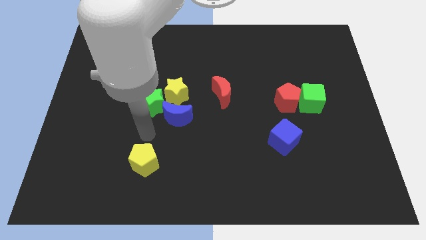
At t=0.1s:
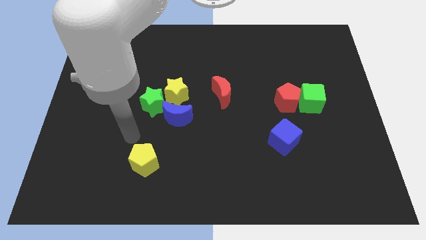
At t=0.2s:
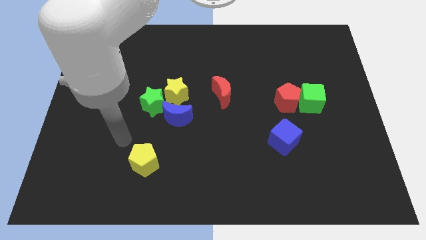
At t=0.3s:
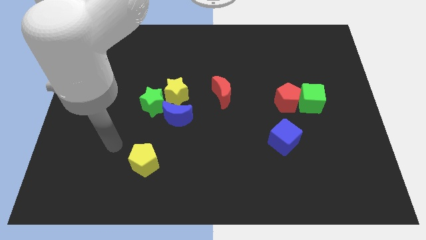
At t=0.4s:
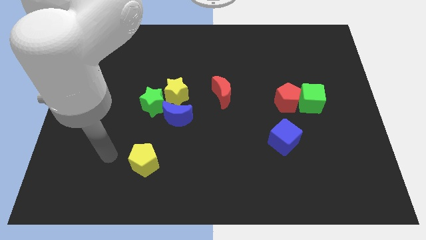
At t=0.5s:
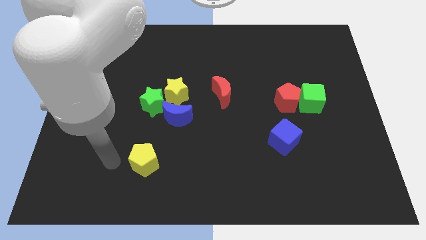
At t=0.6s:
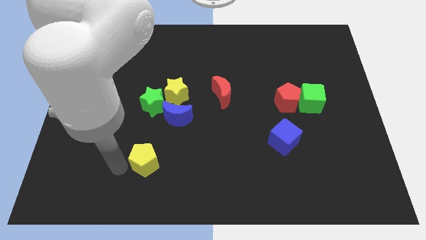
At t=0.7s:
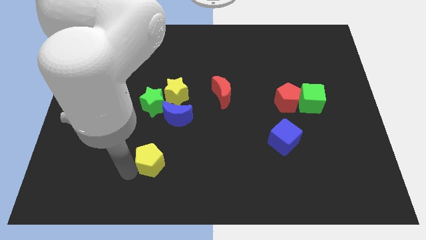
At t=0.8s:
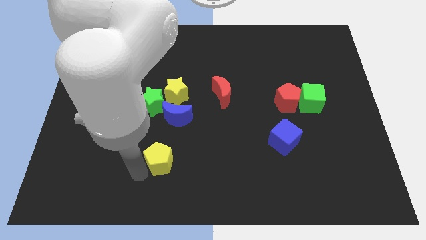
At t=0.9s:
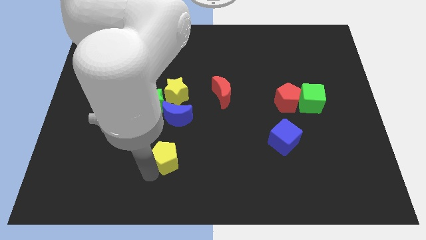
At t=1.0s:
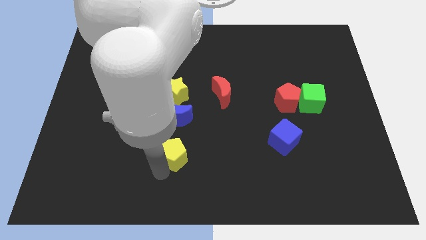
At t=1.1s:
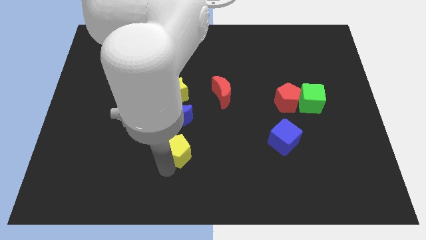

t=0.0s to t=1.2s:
place the yellow pentagon vertically below blue moon

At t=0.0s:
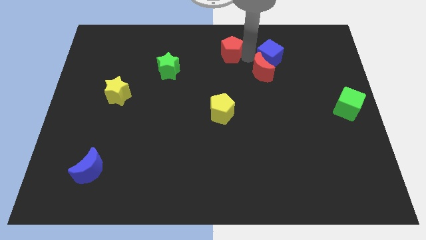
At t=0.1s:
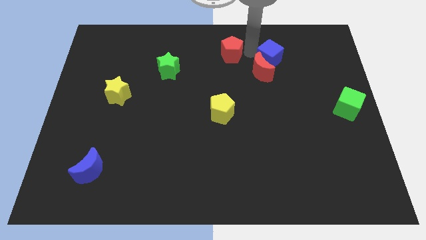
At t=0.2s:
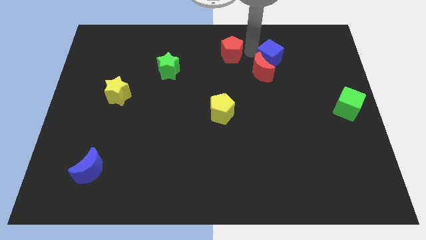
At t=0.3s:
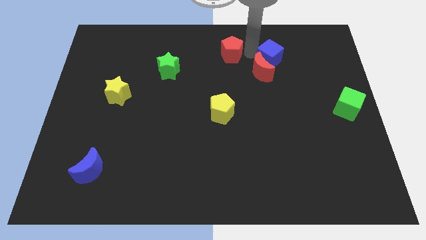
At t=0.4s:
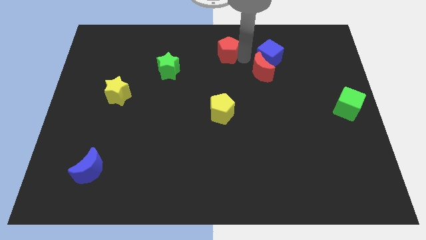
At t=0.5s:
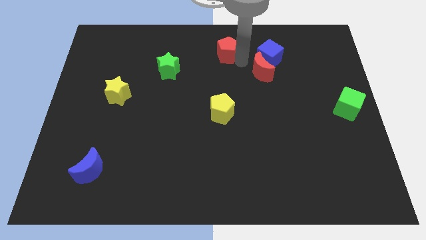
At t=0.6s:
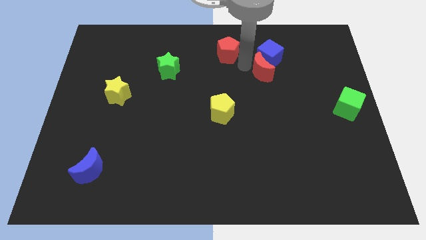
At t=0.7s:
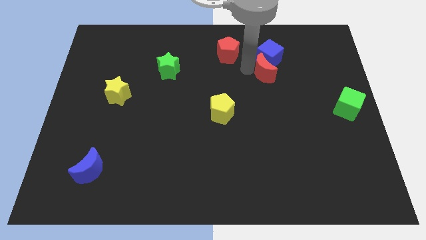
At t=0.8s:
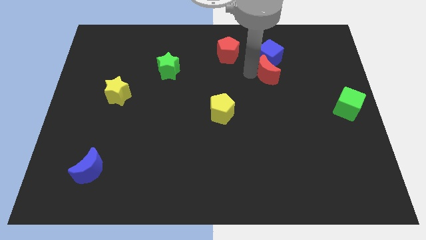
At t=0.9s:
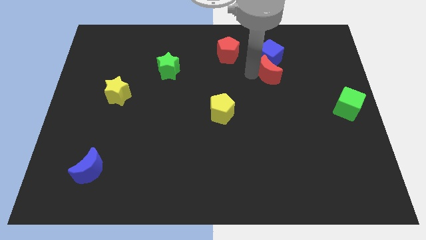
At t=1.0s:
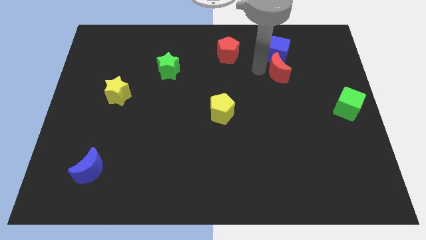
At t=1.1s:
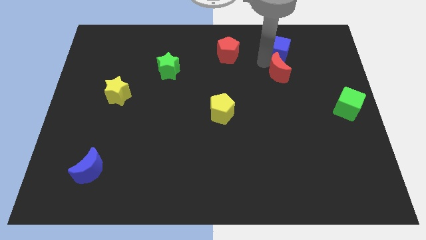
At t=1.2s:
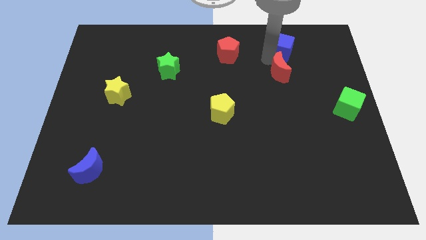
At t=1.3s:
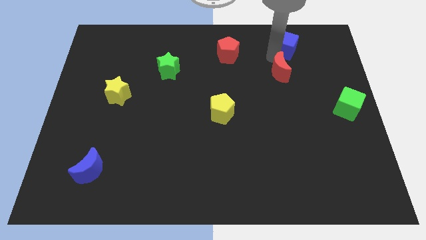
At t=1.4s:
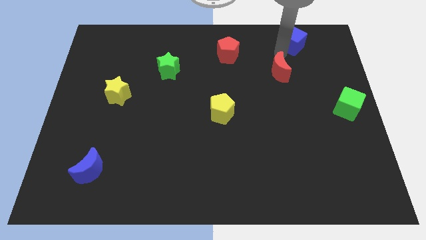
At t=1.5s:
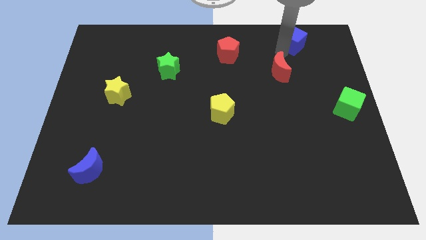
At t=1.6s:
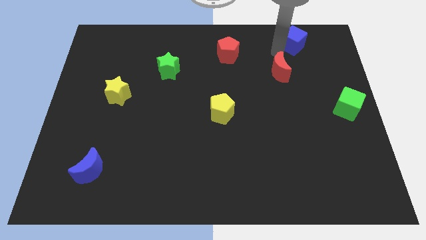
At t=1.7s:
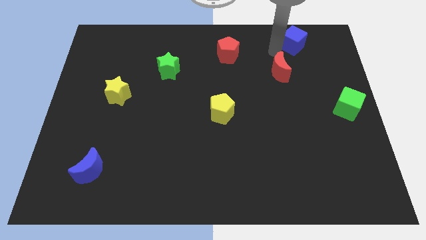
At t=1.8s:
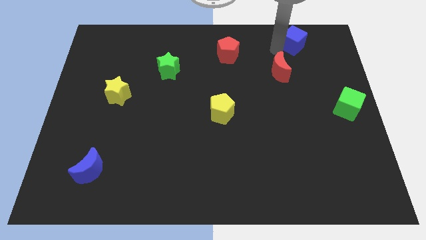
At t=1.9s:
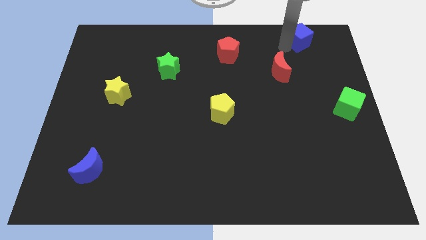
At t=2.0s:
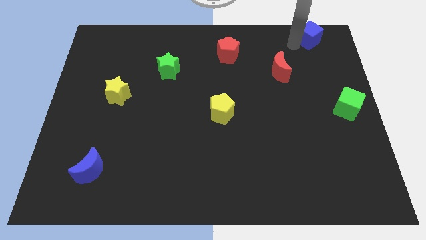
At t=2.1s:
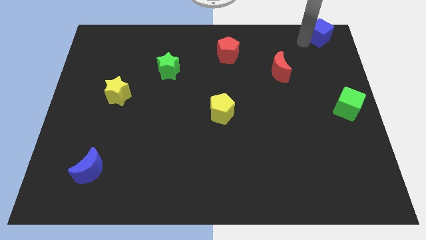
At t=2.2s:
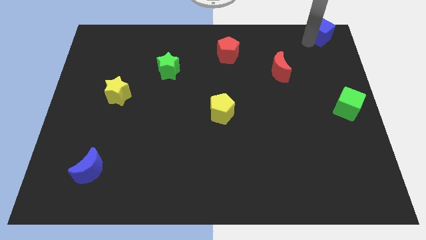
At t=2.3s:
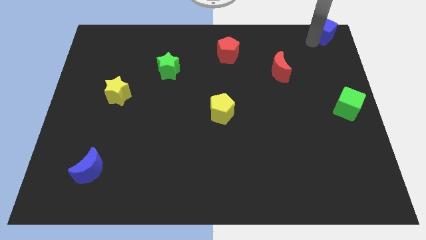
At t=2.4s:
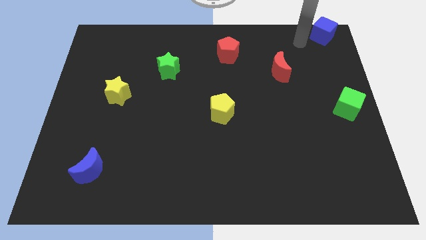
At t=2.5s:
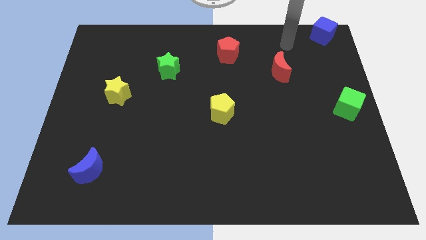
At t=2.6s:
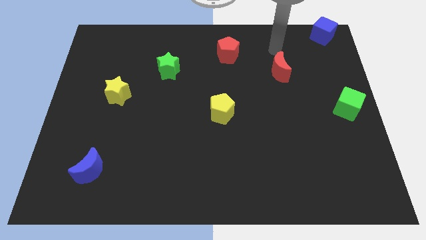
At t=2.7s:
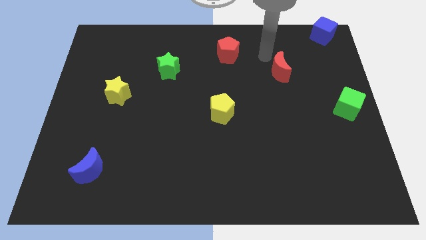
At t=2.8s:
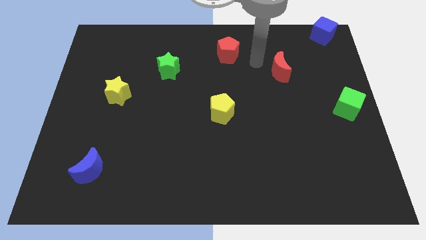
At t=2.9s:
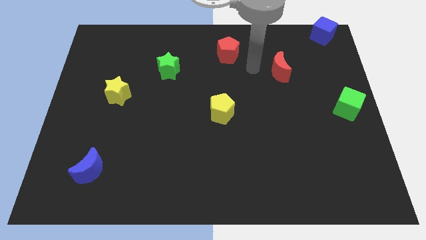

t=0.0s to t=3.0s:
place the blue cube above the green cube

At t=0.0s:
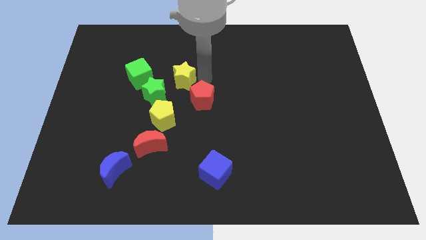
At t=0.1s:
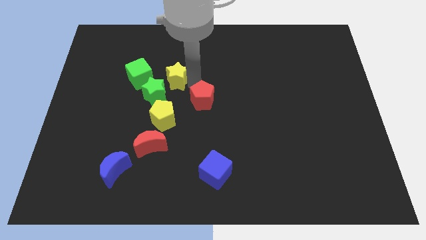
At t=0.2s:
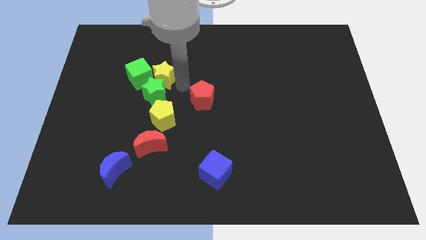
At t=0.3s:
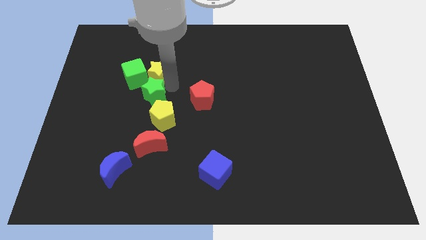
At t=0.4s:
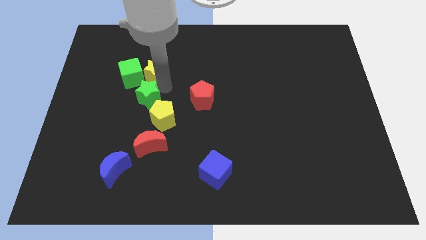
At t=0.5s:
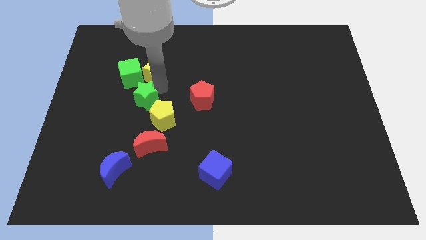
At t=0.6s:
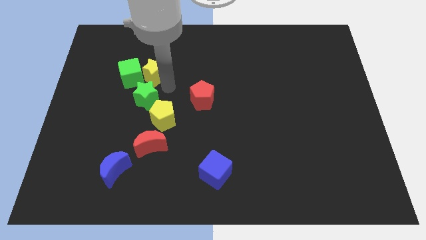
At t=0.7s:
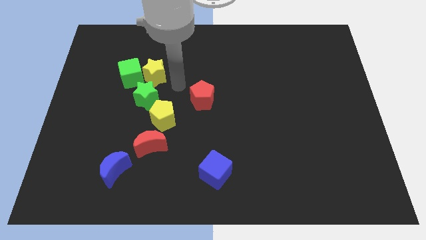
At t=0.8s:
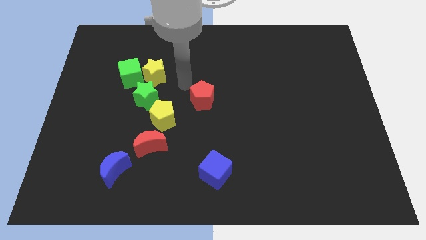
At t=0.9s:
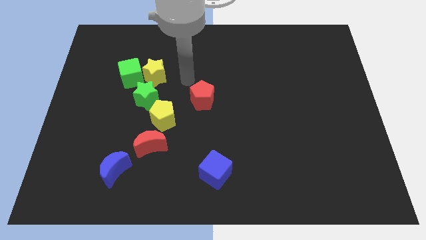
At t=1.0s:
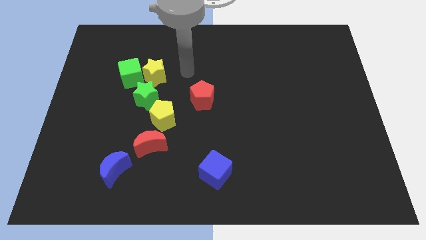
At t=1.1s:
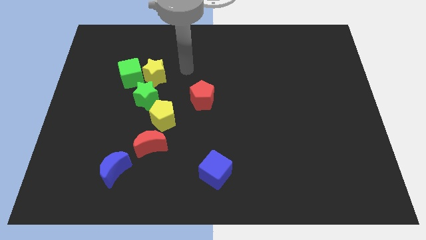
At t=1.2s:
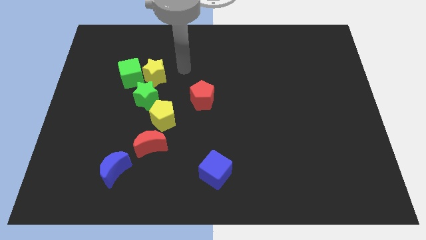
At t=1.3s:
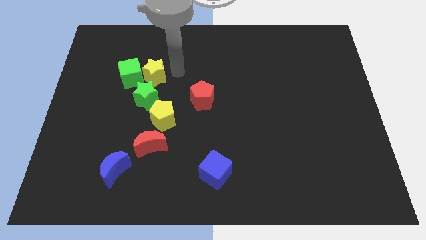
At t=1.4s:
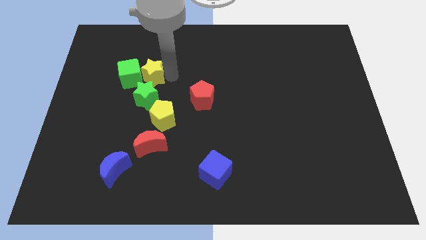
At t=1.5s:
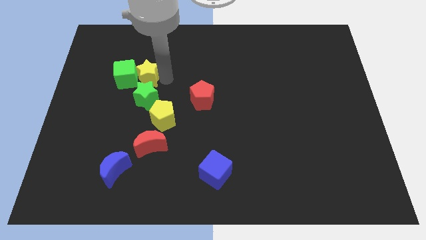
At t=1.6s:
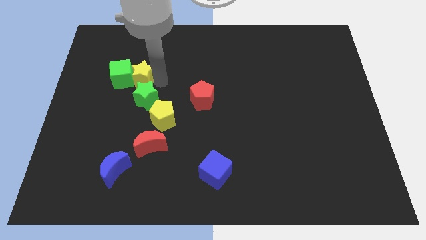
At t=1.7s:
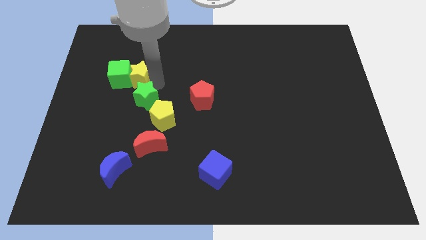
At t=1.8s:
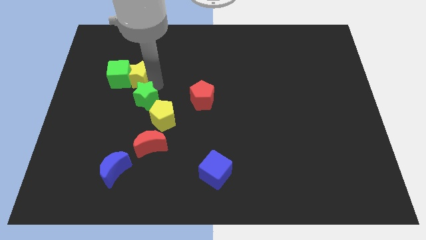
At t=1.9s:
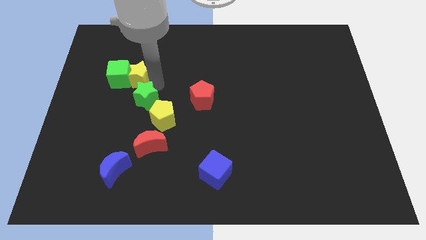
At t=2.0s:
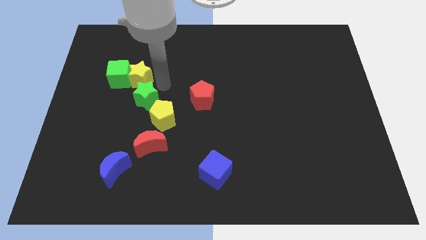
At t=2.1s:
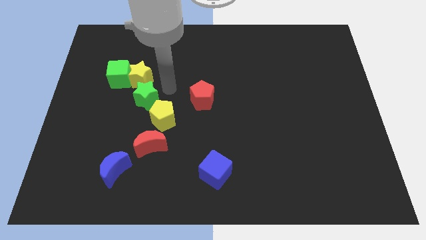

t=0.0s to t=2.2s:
place yellow star green block and green star in the form of arc

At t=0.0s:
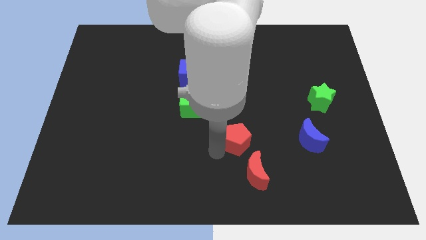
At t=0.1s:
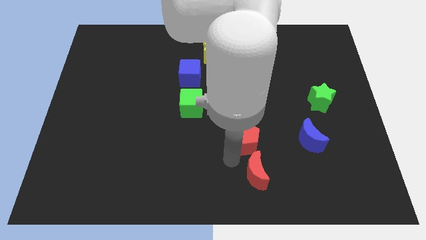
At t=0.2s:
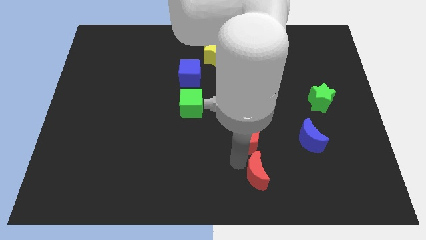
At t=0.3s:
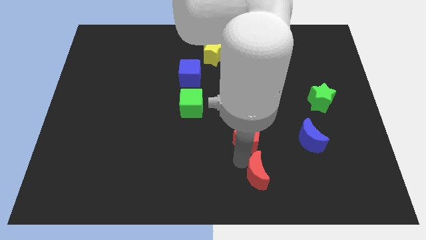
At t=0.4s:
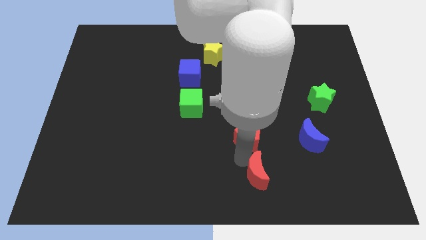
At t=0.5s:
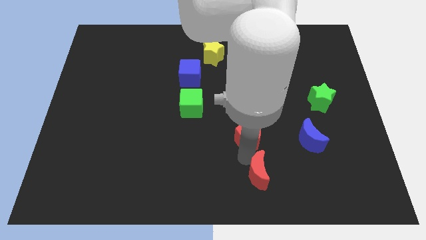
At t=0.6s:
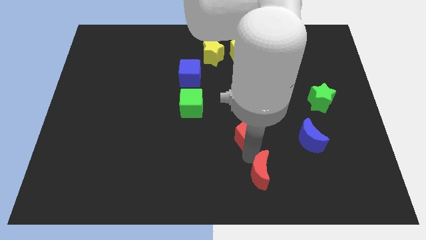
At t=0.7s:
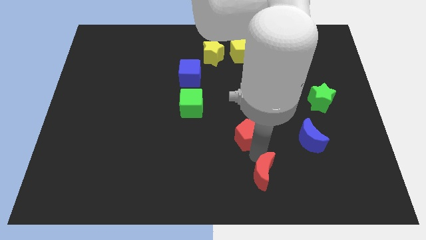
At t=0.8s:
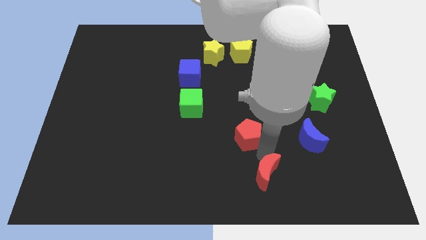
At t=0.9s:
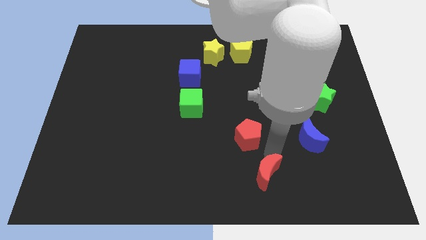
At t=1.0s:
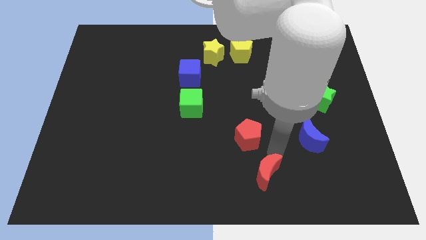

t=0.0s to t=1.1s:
separate red blocks from each other

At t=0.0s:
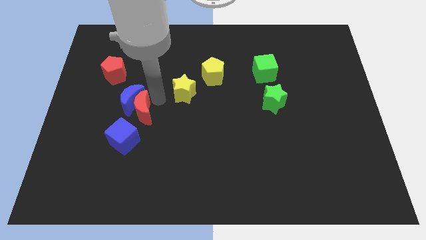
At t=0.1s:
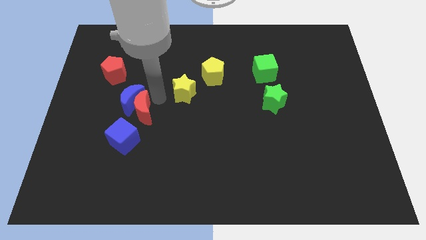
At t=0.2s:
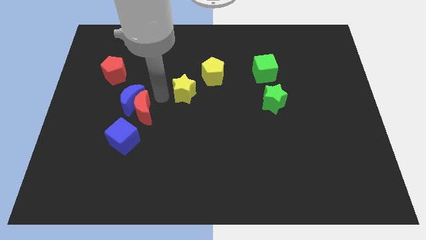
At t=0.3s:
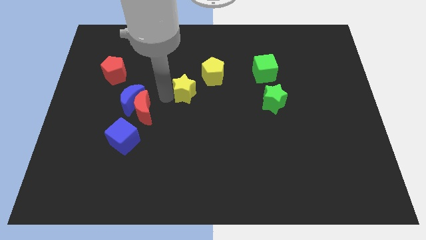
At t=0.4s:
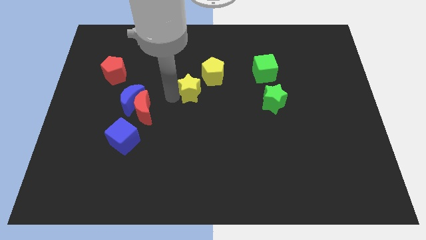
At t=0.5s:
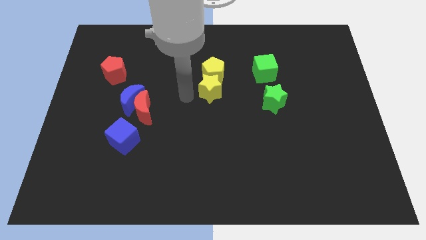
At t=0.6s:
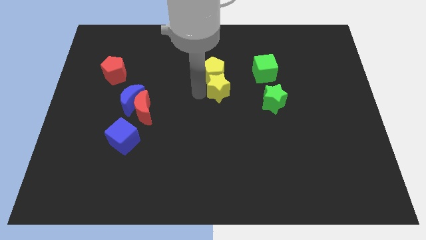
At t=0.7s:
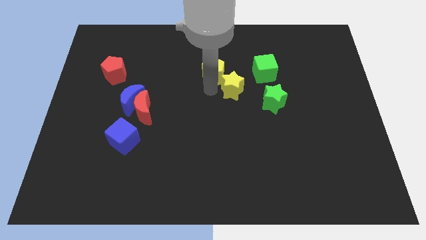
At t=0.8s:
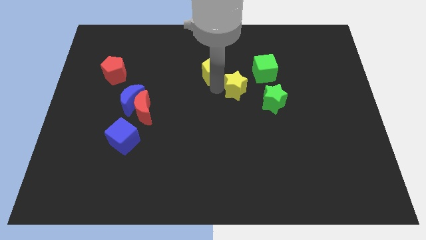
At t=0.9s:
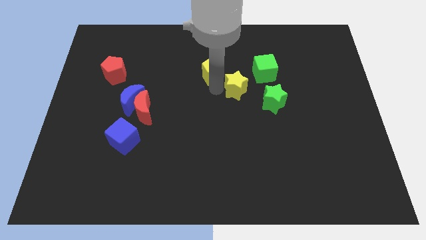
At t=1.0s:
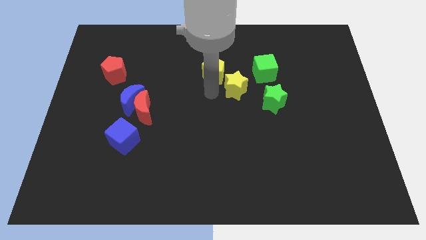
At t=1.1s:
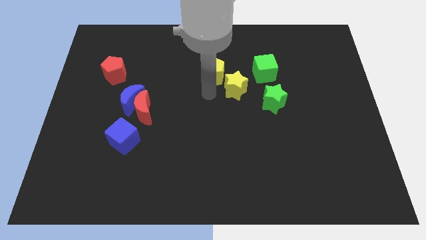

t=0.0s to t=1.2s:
move yellow star near green cube

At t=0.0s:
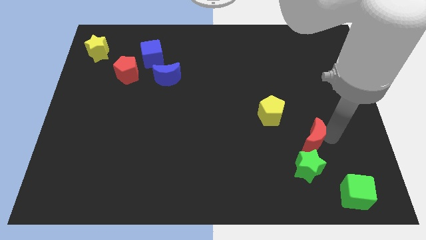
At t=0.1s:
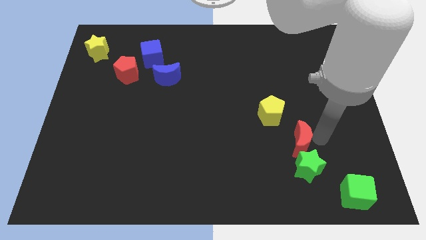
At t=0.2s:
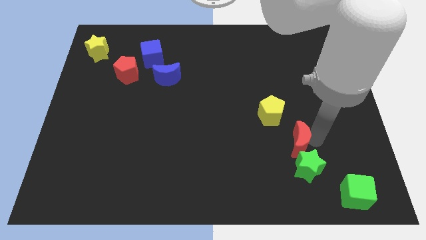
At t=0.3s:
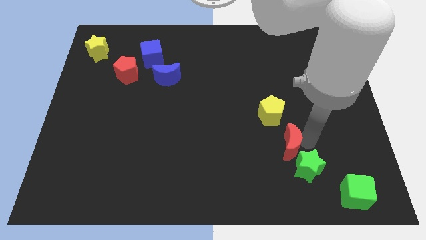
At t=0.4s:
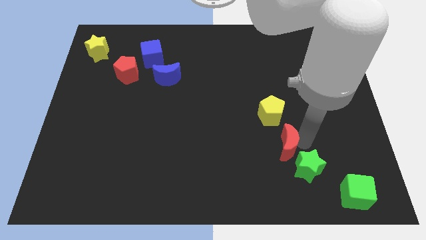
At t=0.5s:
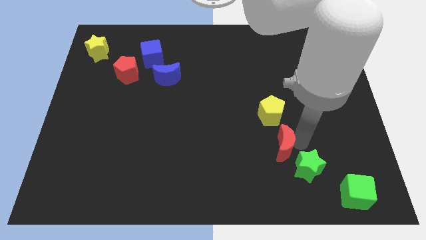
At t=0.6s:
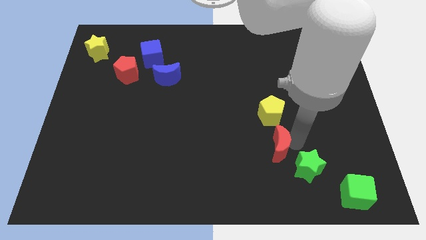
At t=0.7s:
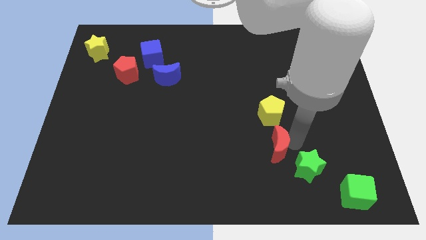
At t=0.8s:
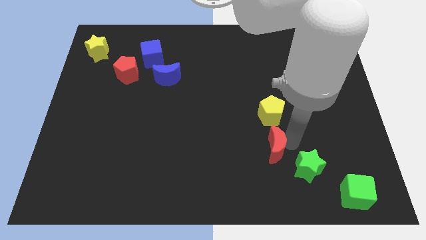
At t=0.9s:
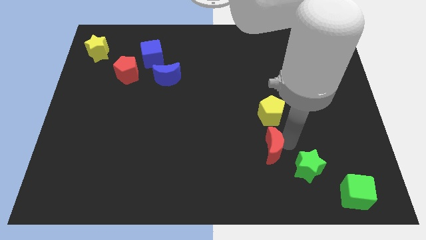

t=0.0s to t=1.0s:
move red moon to the bottom of yellow pentagon
